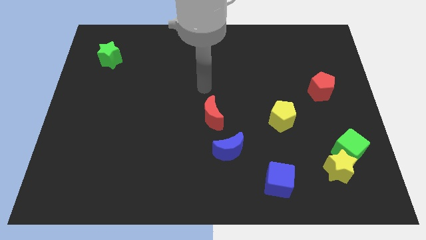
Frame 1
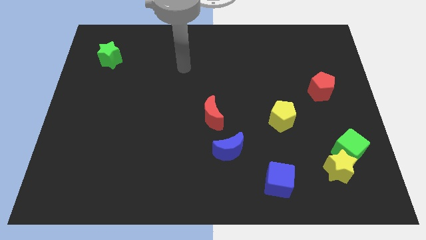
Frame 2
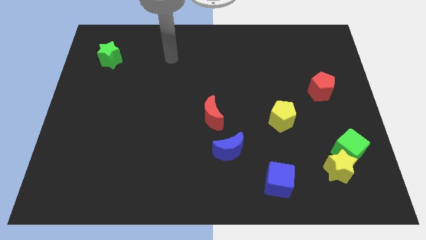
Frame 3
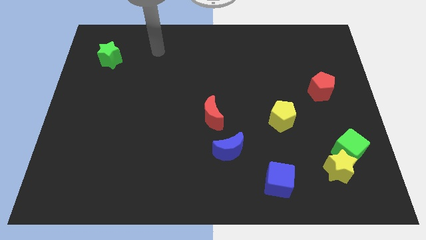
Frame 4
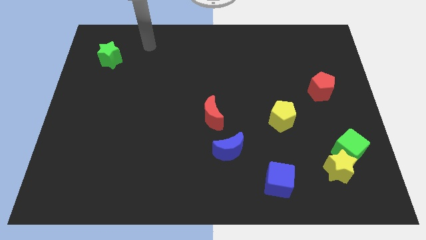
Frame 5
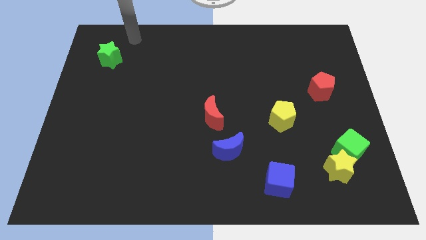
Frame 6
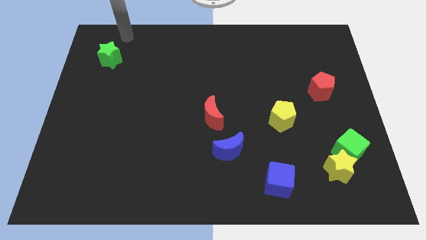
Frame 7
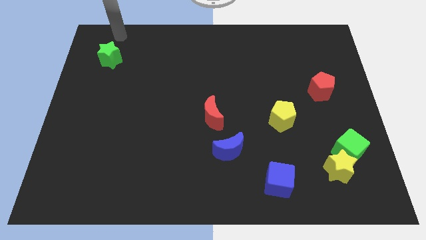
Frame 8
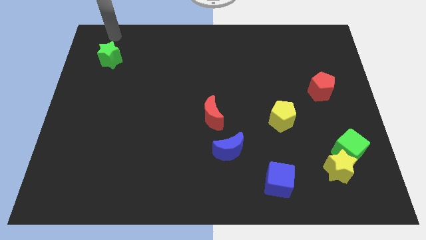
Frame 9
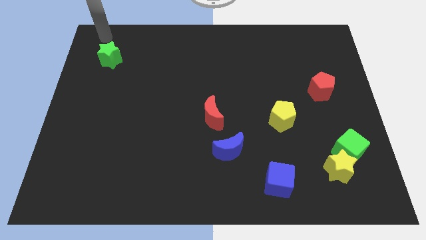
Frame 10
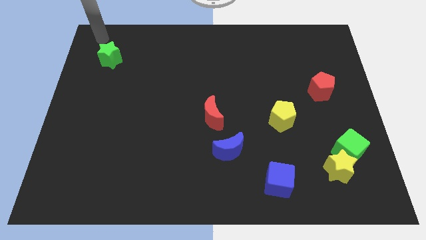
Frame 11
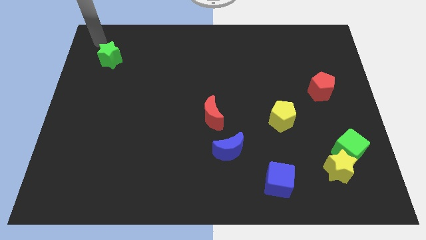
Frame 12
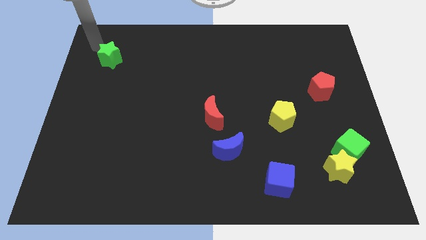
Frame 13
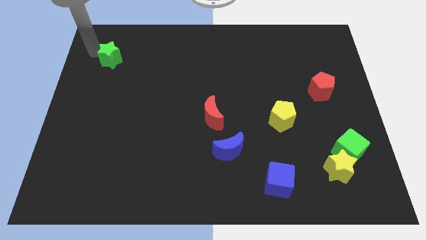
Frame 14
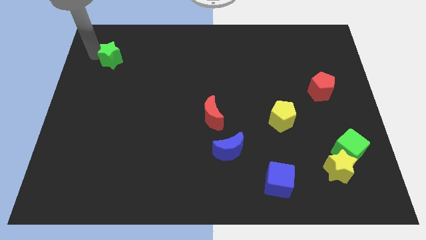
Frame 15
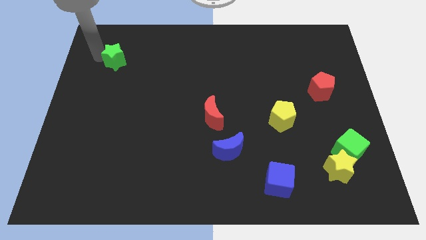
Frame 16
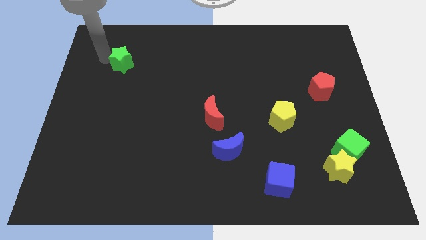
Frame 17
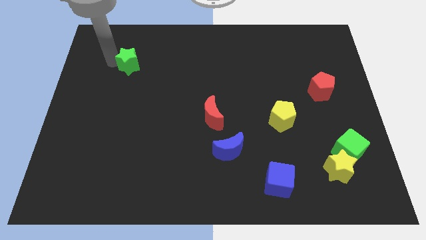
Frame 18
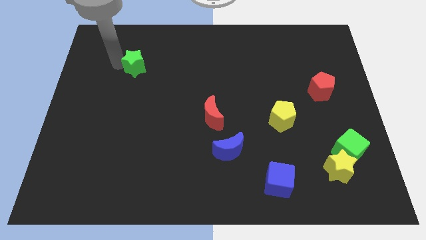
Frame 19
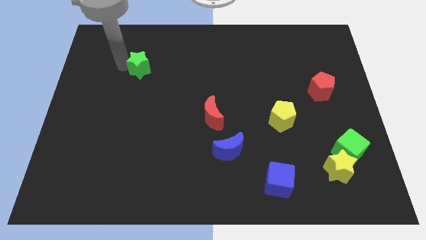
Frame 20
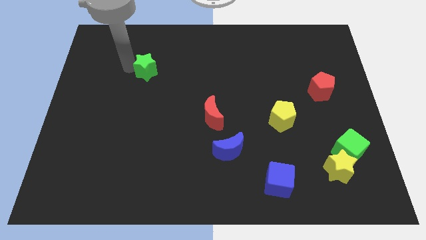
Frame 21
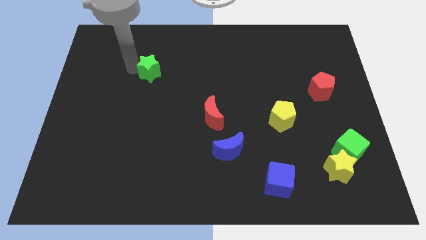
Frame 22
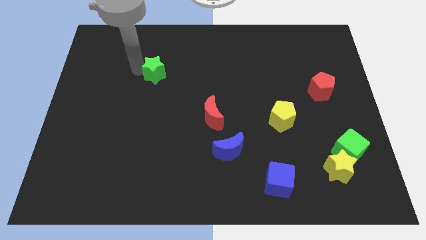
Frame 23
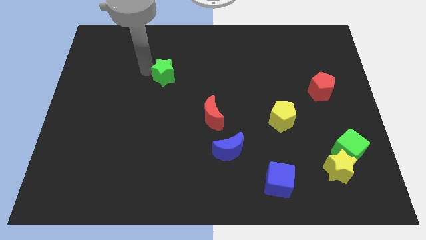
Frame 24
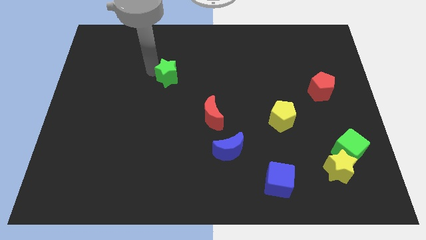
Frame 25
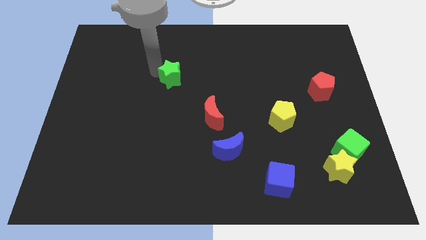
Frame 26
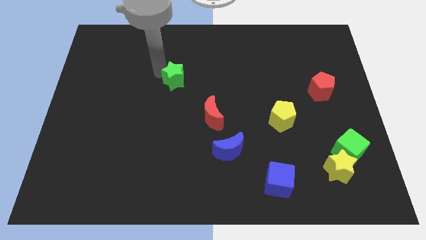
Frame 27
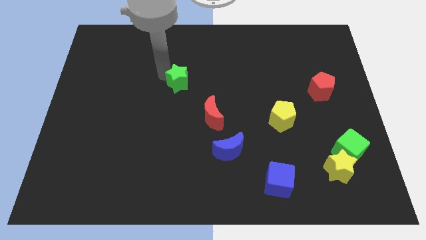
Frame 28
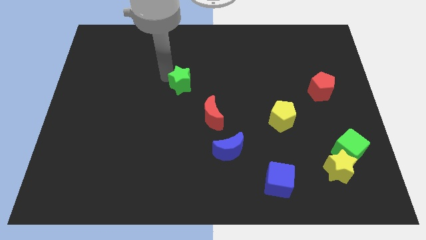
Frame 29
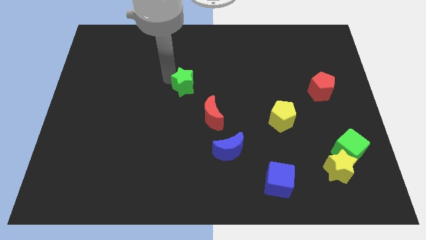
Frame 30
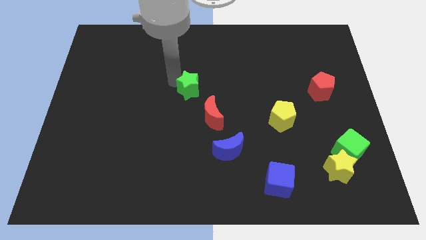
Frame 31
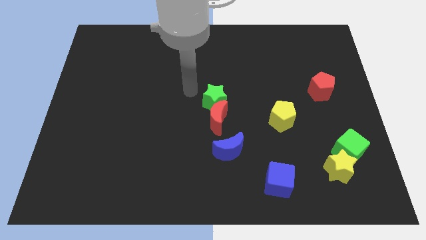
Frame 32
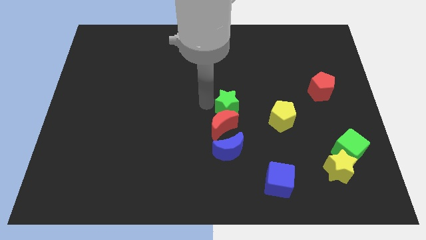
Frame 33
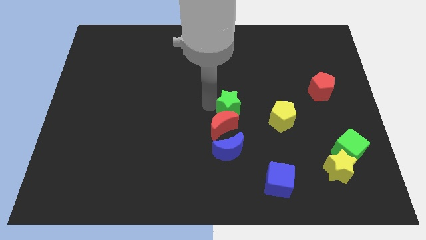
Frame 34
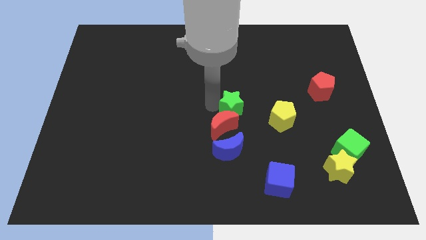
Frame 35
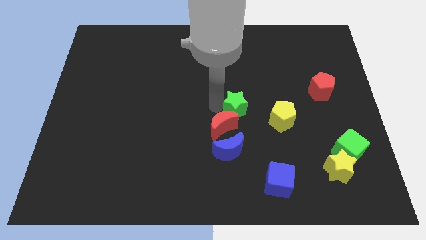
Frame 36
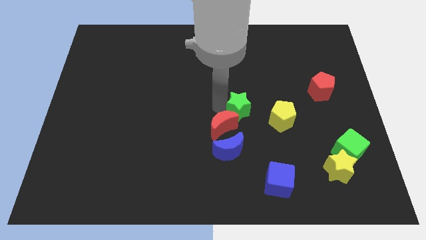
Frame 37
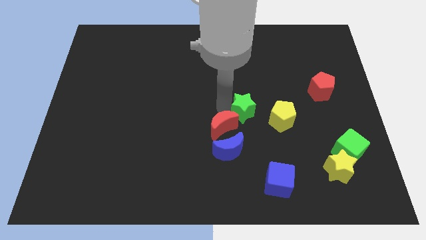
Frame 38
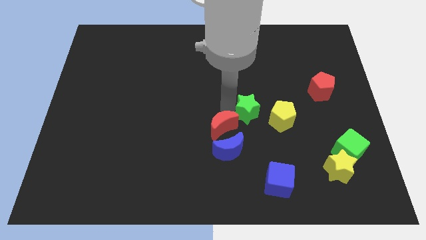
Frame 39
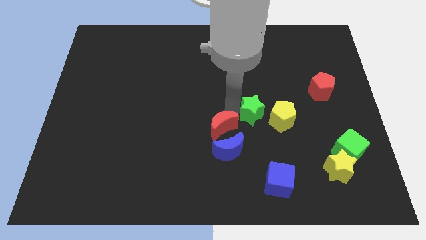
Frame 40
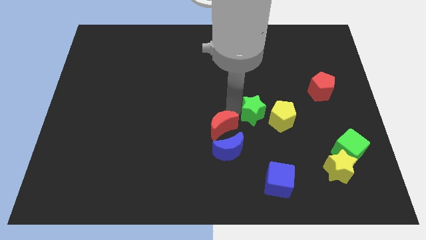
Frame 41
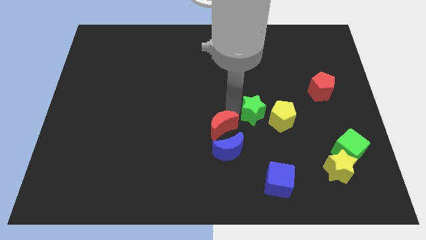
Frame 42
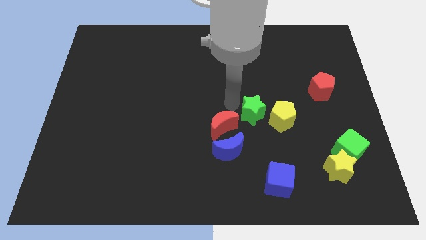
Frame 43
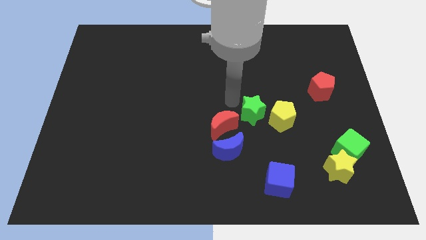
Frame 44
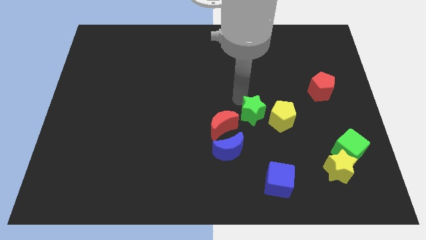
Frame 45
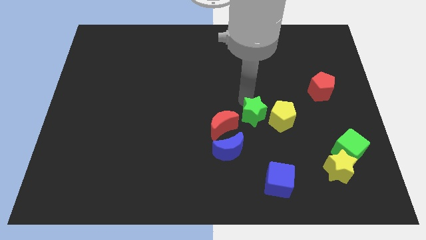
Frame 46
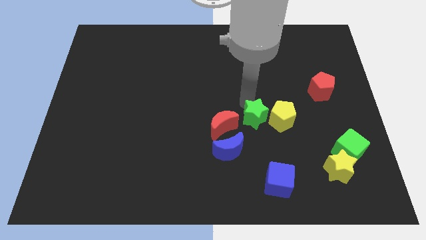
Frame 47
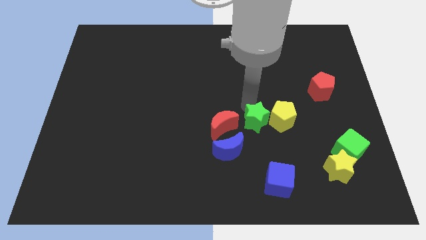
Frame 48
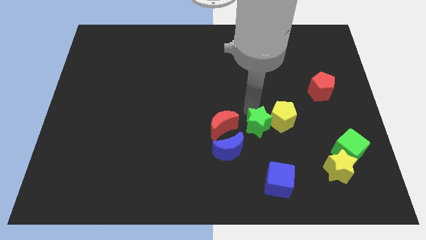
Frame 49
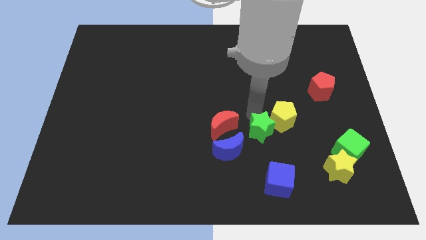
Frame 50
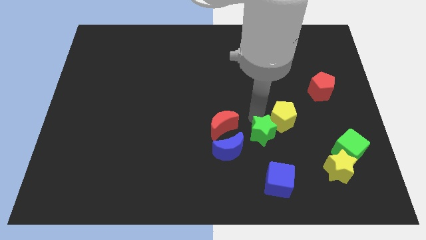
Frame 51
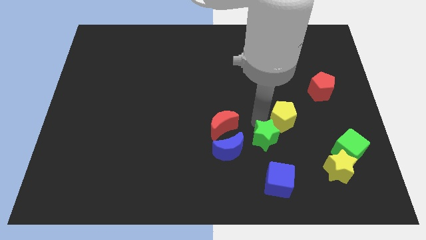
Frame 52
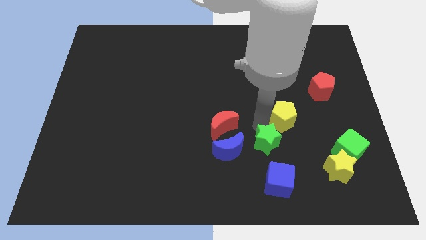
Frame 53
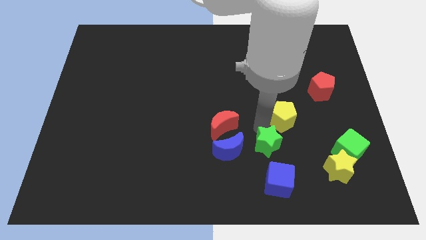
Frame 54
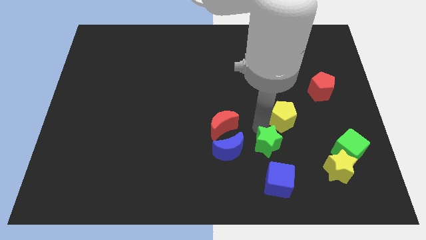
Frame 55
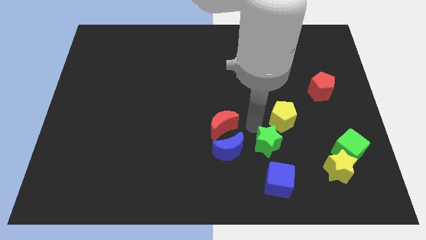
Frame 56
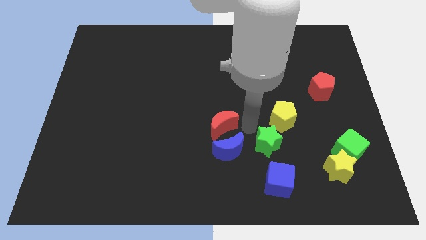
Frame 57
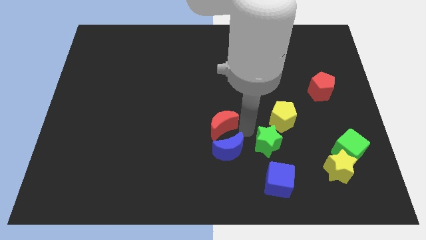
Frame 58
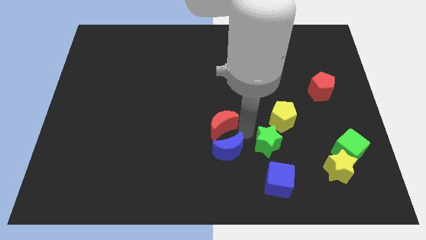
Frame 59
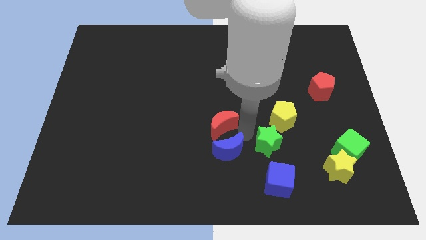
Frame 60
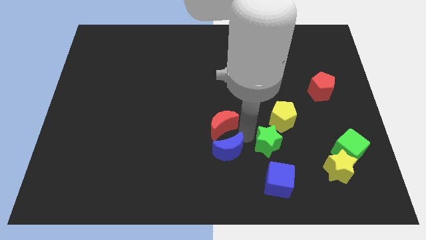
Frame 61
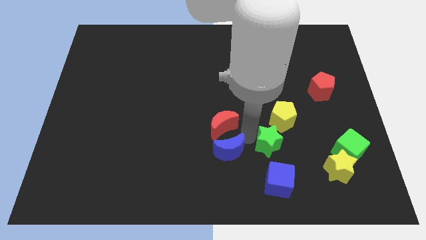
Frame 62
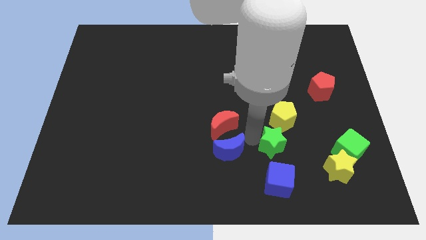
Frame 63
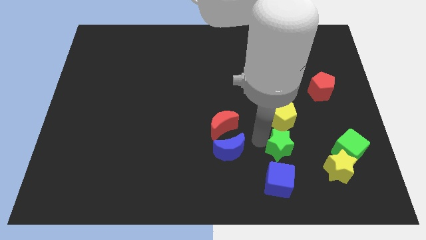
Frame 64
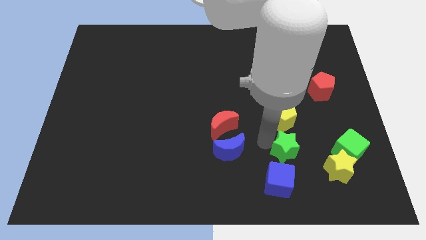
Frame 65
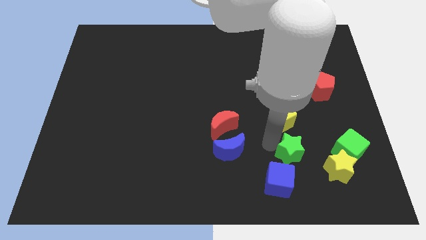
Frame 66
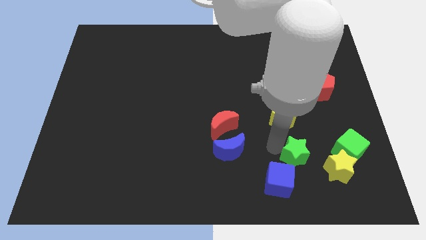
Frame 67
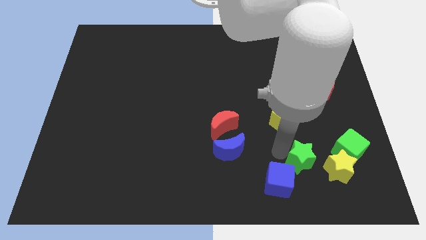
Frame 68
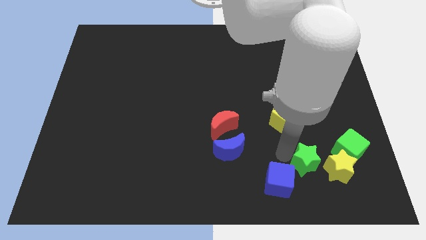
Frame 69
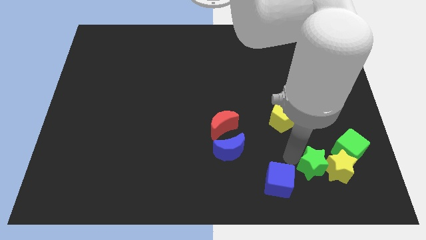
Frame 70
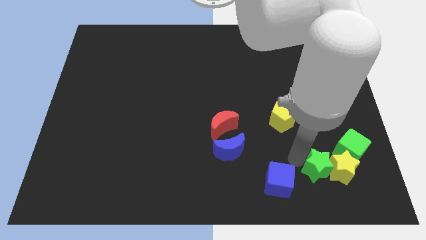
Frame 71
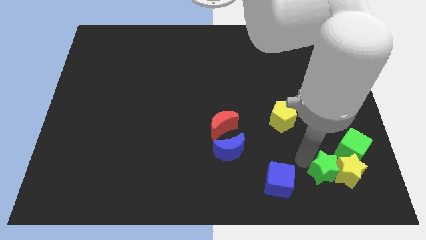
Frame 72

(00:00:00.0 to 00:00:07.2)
push the green star to the yellow star

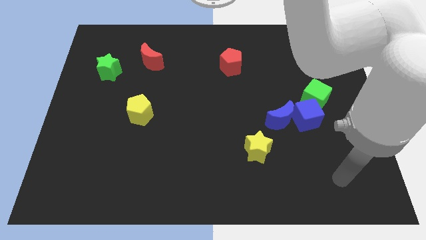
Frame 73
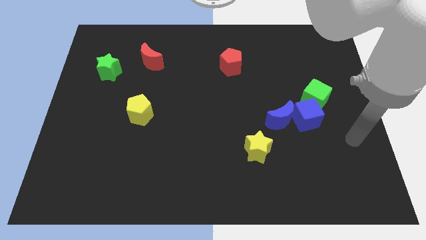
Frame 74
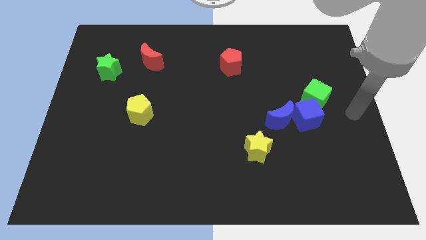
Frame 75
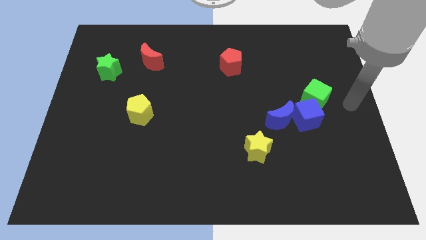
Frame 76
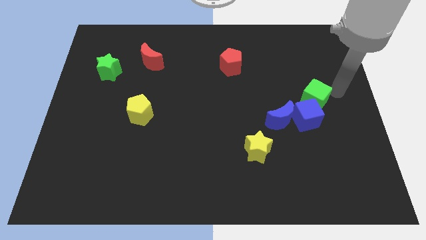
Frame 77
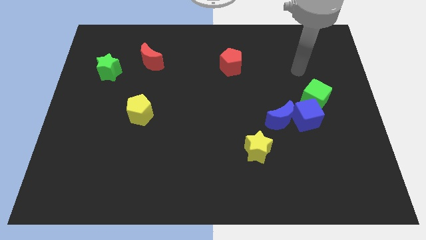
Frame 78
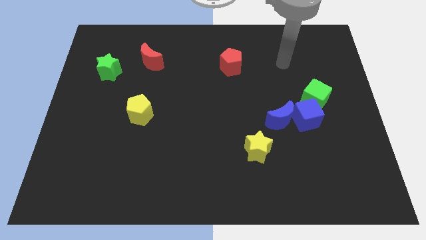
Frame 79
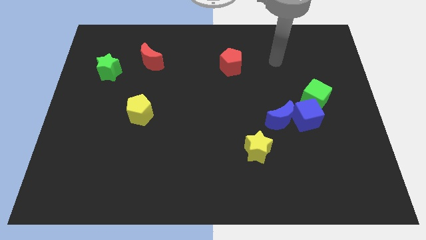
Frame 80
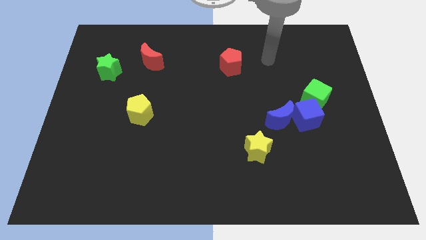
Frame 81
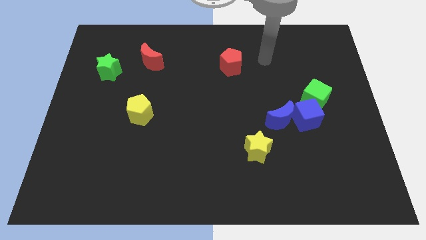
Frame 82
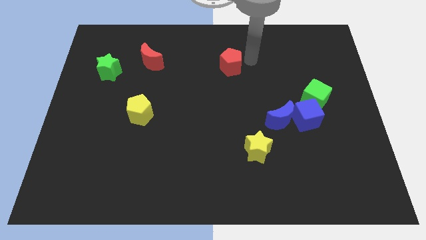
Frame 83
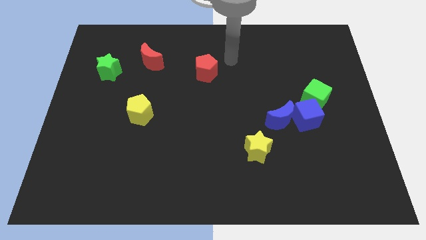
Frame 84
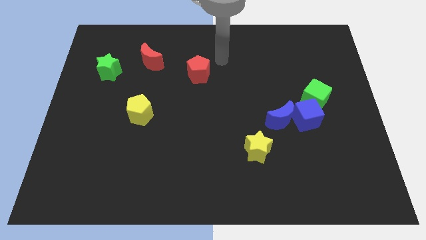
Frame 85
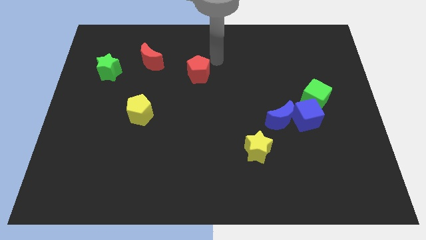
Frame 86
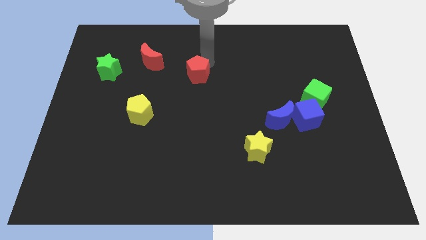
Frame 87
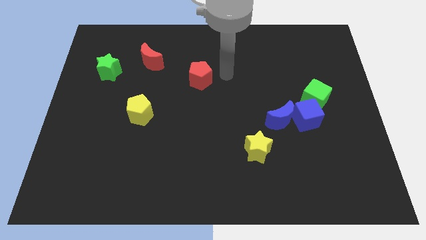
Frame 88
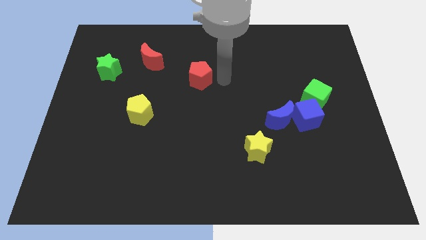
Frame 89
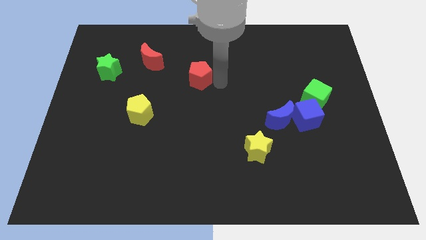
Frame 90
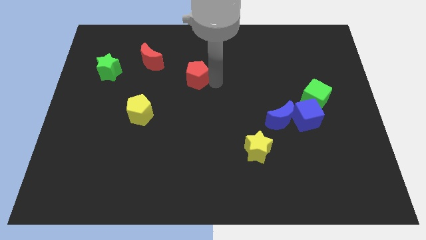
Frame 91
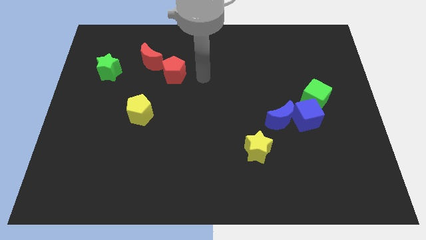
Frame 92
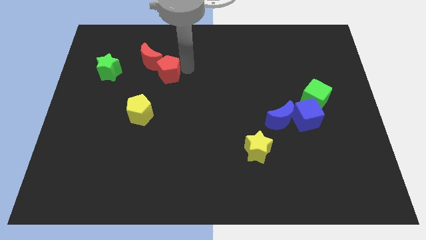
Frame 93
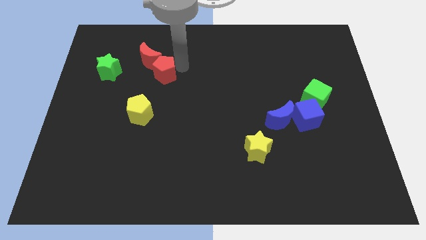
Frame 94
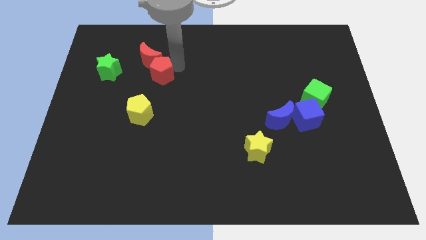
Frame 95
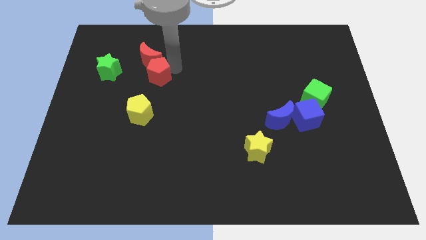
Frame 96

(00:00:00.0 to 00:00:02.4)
slide the red pentagon close to the red moon
